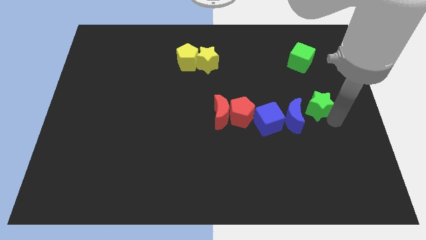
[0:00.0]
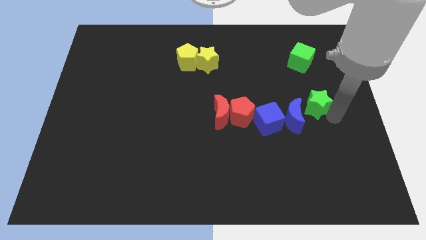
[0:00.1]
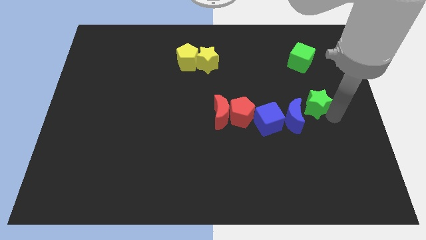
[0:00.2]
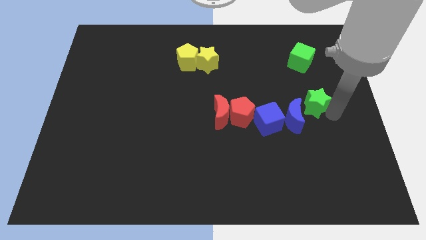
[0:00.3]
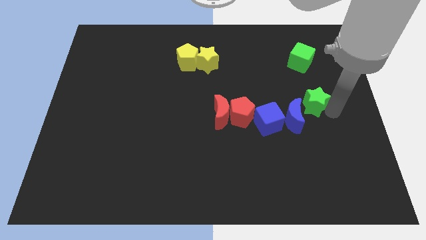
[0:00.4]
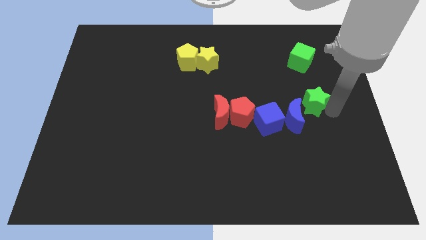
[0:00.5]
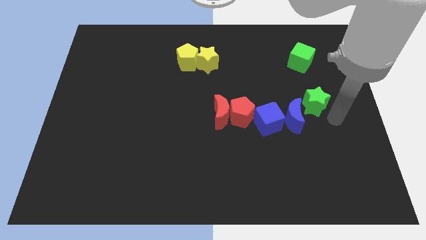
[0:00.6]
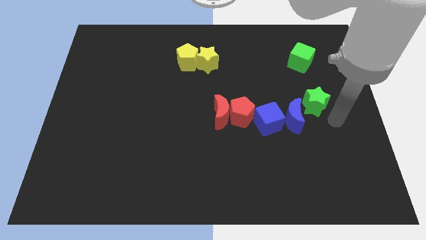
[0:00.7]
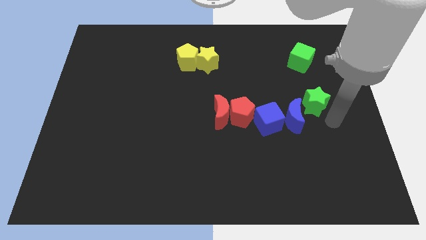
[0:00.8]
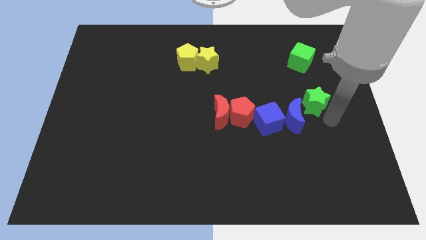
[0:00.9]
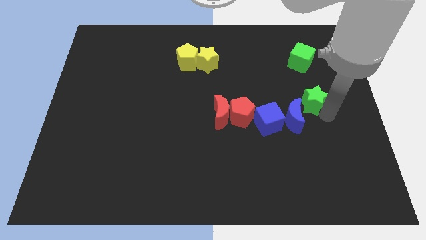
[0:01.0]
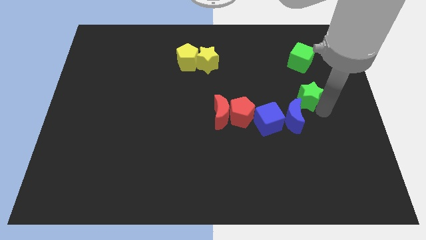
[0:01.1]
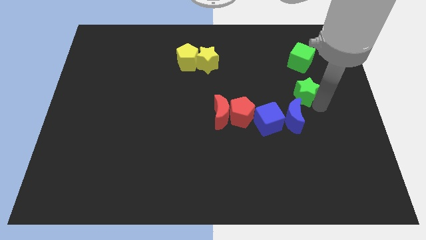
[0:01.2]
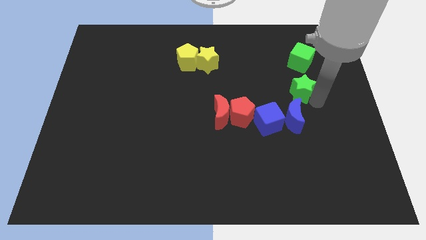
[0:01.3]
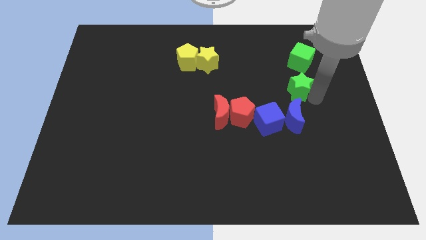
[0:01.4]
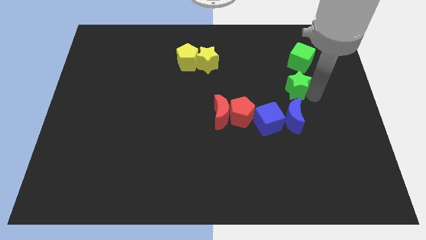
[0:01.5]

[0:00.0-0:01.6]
place the green star in between the green cube and the blue moon

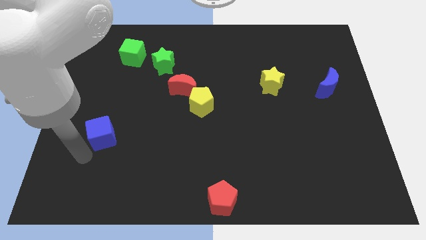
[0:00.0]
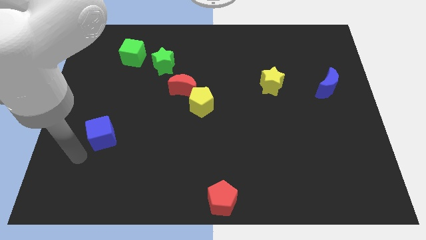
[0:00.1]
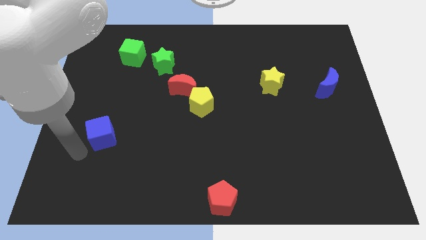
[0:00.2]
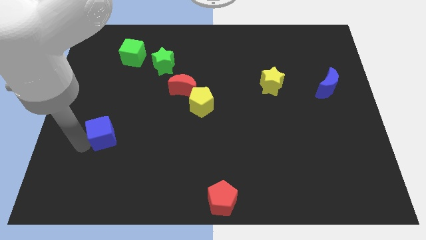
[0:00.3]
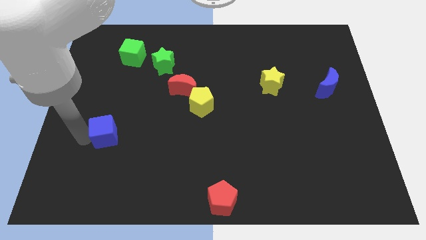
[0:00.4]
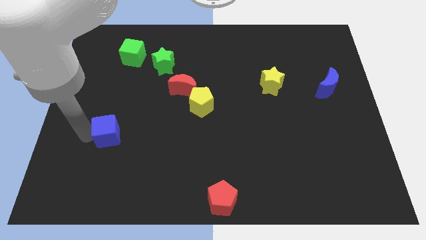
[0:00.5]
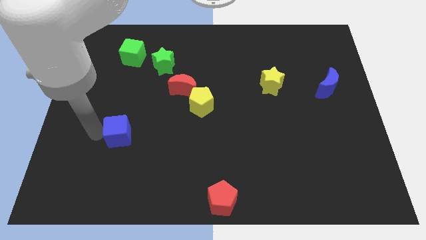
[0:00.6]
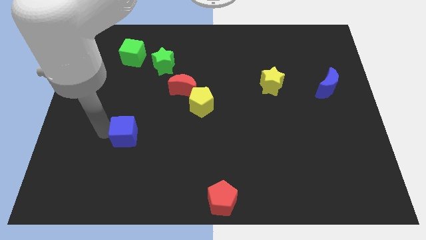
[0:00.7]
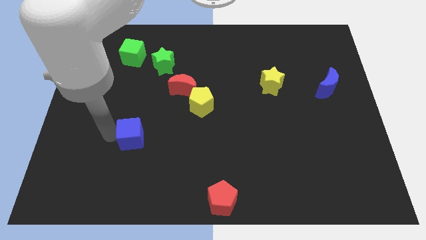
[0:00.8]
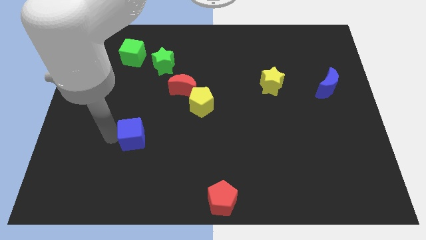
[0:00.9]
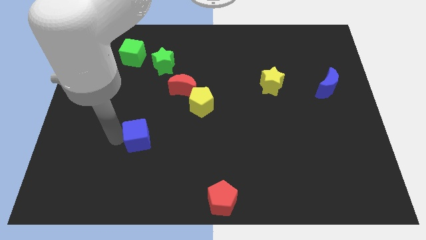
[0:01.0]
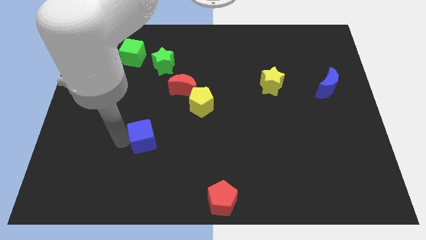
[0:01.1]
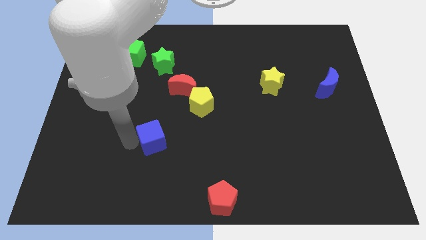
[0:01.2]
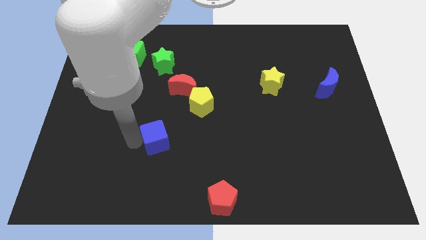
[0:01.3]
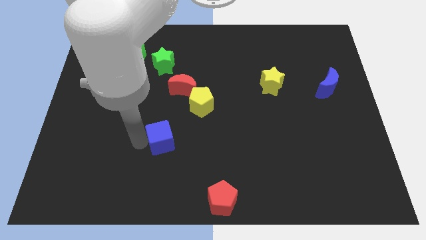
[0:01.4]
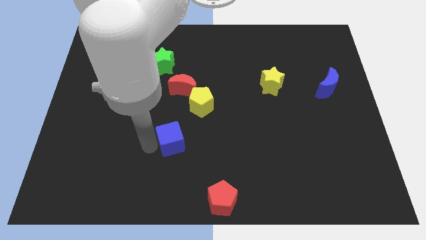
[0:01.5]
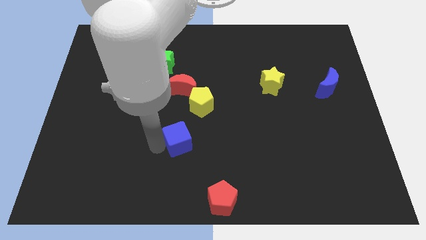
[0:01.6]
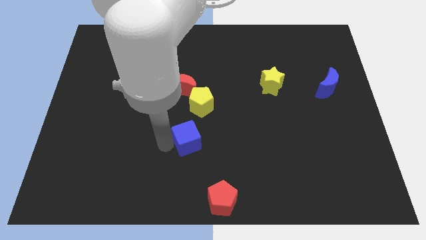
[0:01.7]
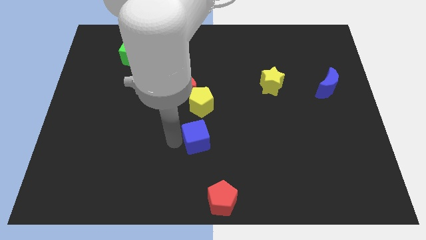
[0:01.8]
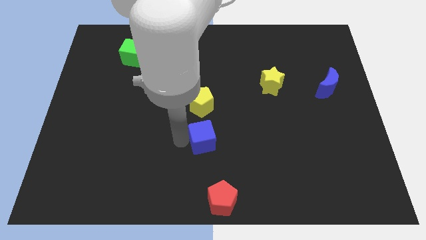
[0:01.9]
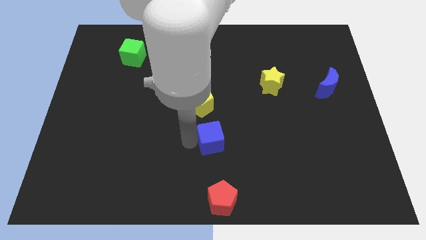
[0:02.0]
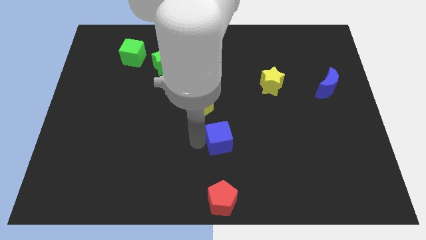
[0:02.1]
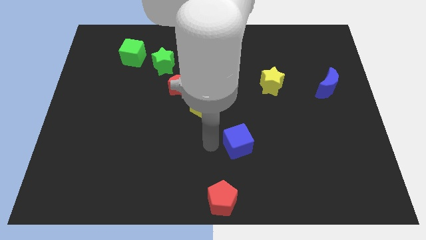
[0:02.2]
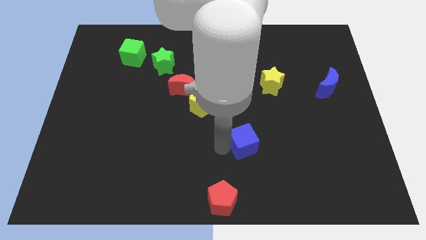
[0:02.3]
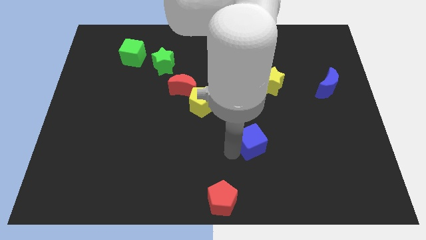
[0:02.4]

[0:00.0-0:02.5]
push the blue cube right above the red pentagon

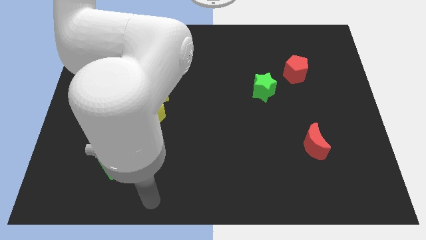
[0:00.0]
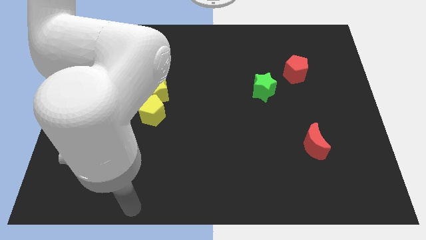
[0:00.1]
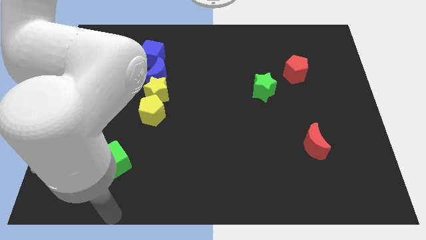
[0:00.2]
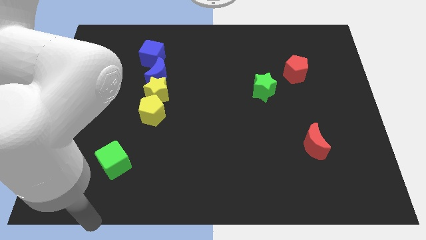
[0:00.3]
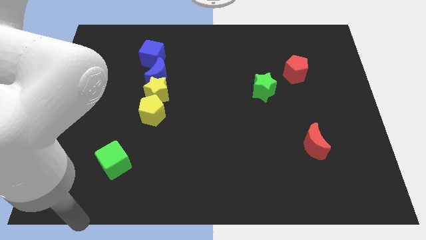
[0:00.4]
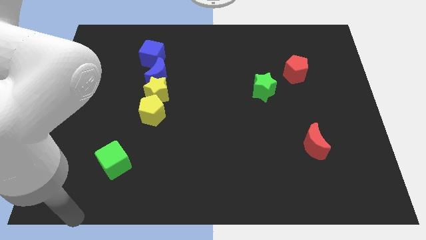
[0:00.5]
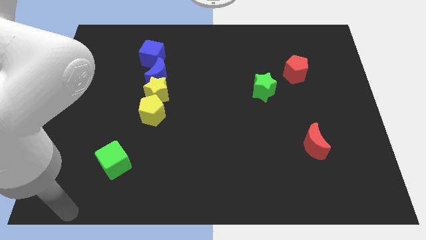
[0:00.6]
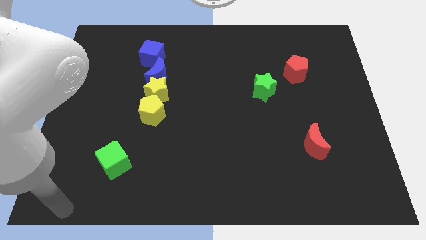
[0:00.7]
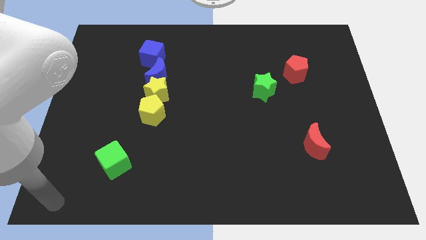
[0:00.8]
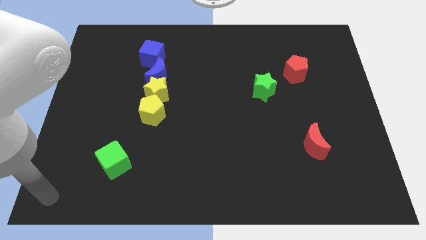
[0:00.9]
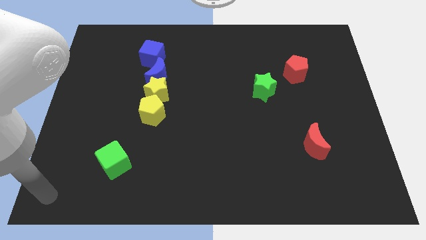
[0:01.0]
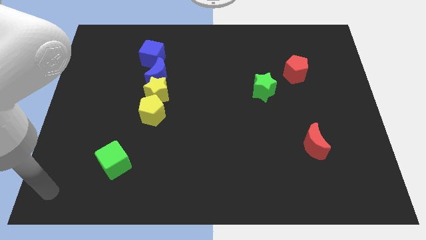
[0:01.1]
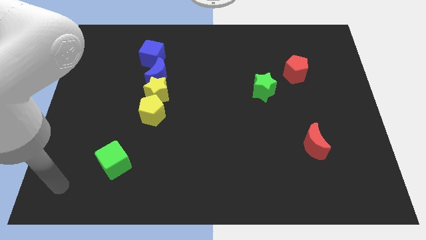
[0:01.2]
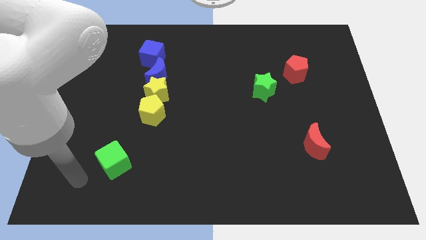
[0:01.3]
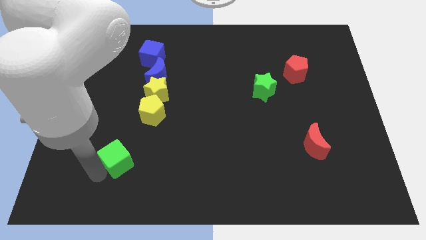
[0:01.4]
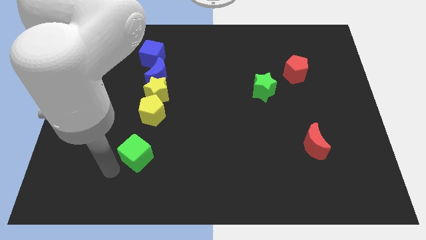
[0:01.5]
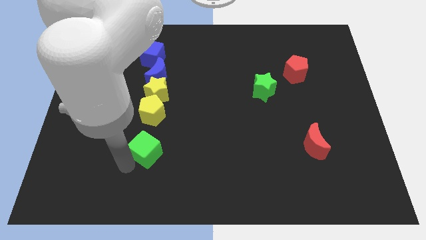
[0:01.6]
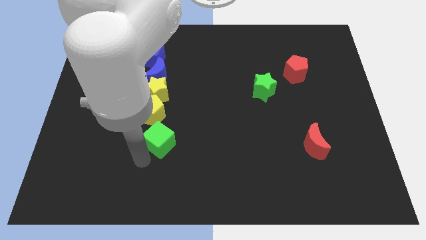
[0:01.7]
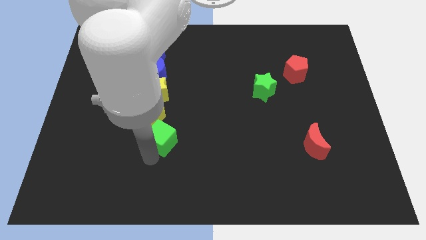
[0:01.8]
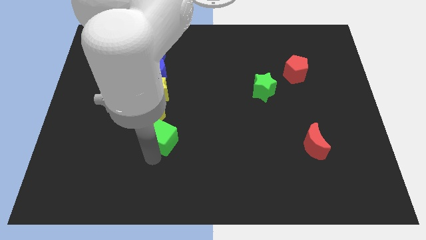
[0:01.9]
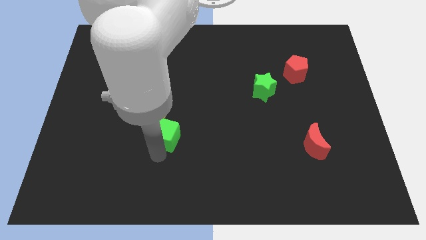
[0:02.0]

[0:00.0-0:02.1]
move green cube below the yellow pentagon

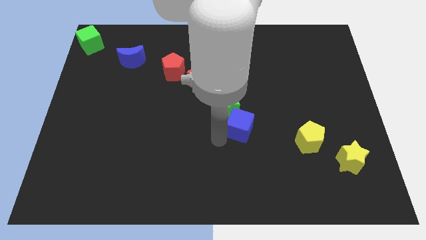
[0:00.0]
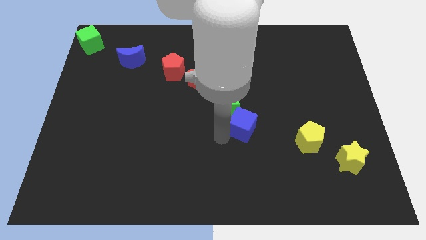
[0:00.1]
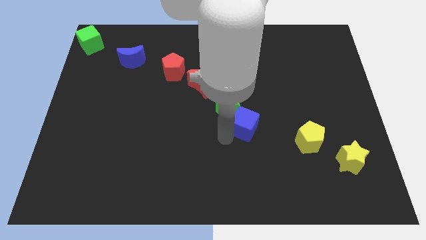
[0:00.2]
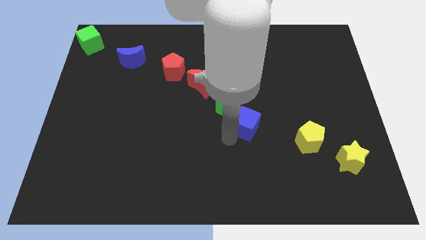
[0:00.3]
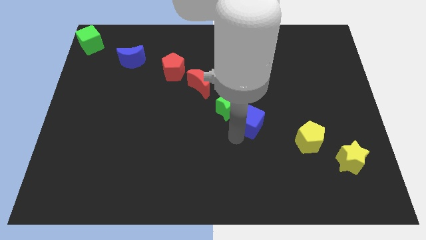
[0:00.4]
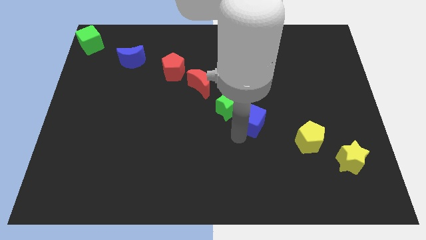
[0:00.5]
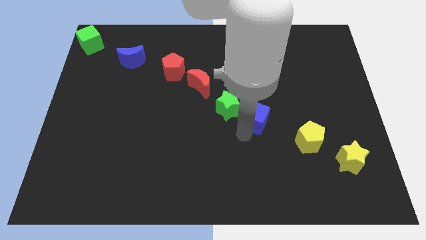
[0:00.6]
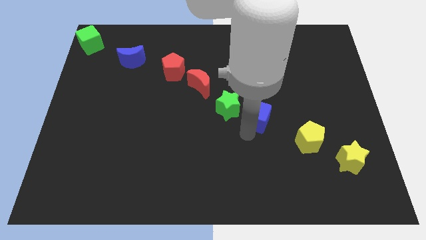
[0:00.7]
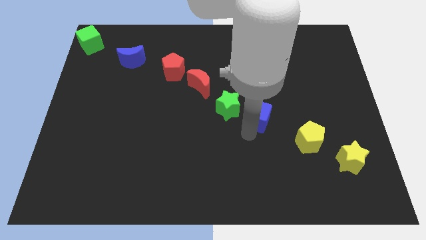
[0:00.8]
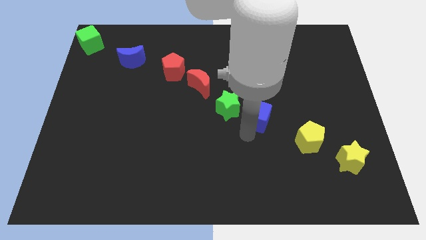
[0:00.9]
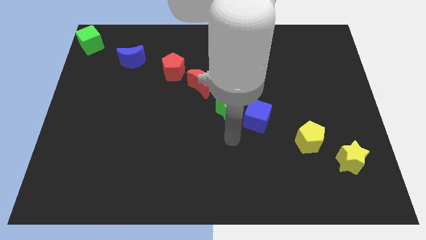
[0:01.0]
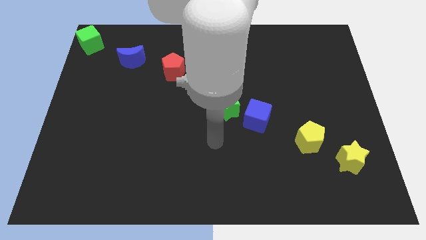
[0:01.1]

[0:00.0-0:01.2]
place the blue cube diagonally bottom right to the green star

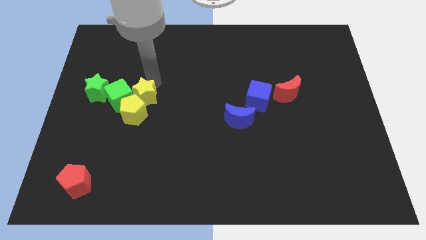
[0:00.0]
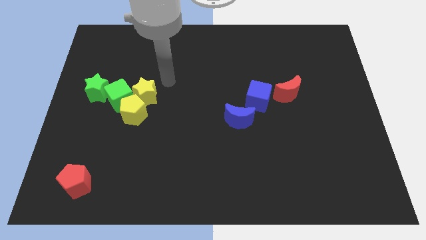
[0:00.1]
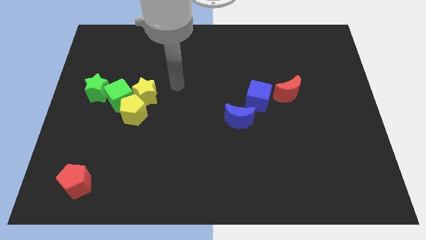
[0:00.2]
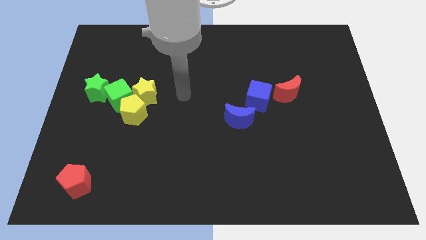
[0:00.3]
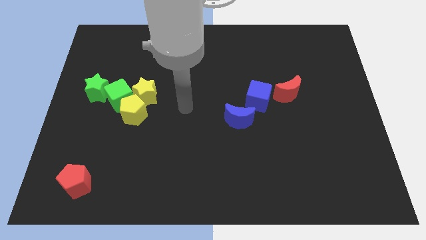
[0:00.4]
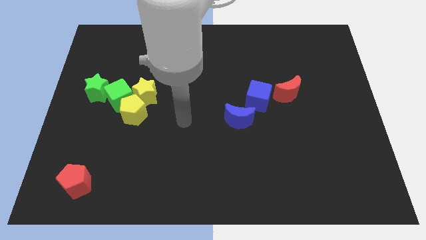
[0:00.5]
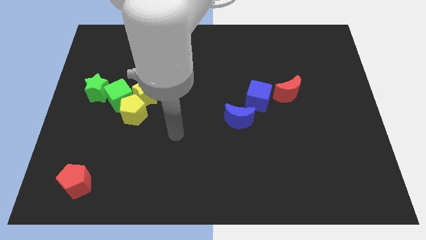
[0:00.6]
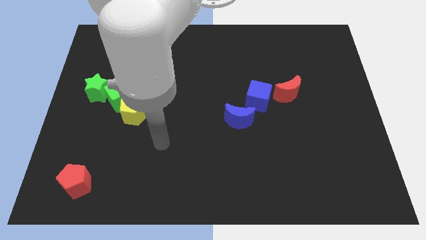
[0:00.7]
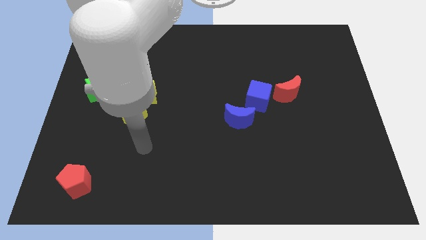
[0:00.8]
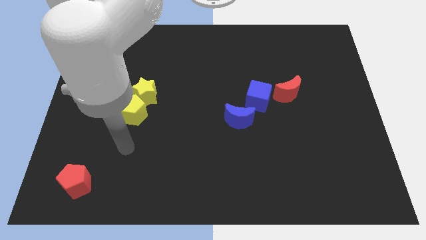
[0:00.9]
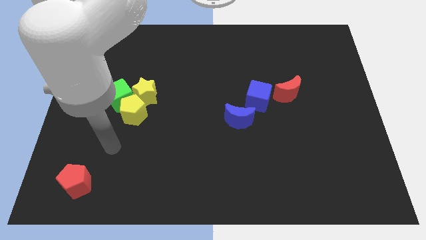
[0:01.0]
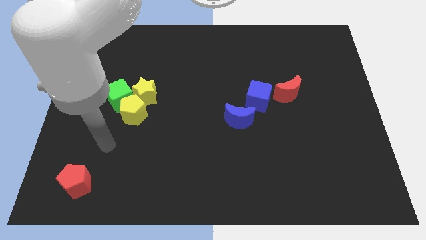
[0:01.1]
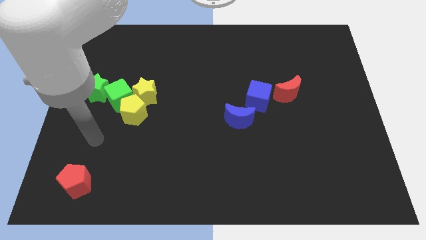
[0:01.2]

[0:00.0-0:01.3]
move the arm towards the top left of the board

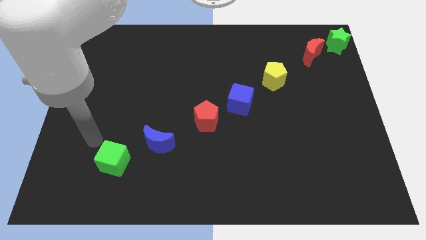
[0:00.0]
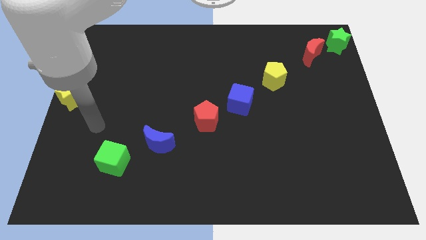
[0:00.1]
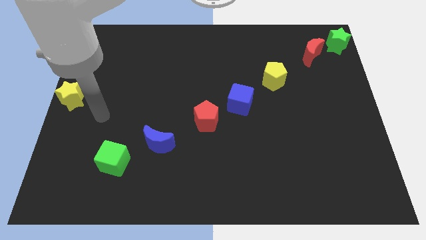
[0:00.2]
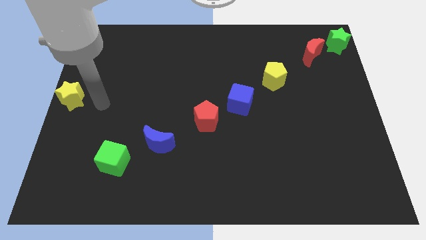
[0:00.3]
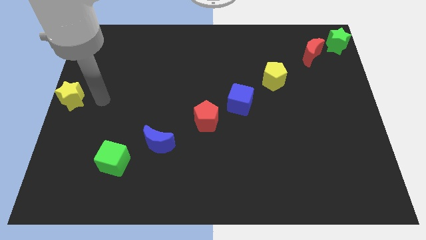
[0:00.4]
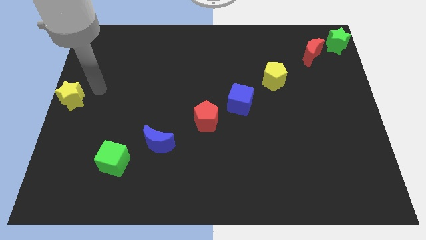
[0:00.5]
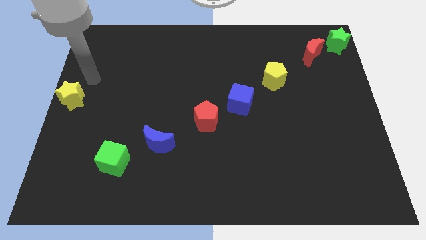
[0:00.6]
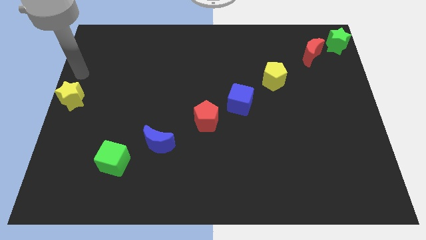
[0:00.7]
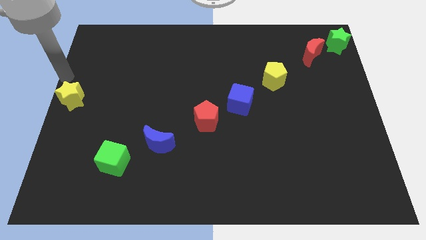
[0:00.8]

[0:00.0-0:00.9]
place your arm at the top of yellow star
